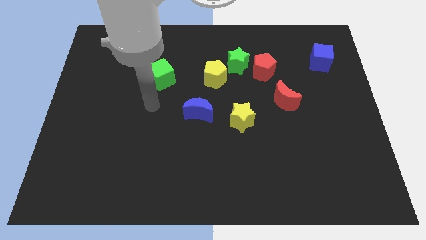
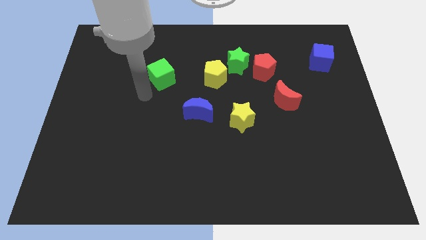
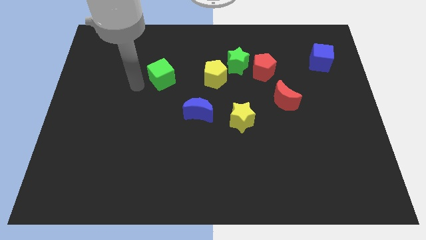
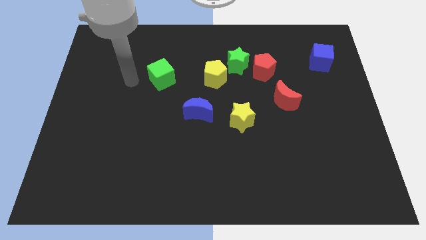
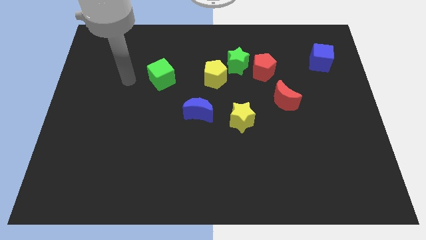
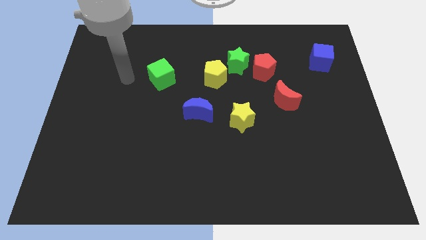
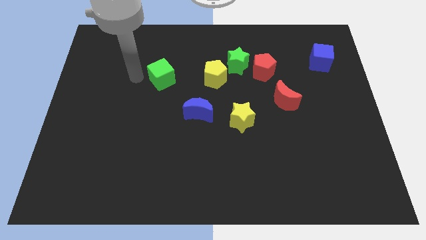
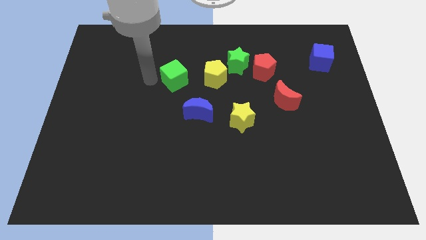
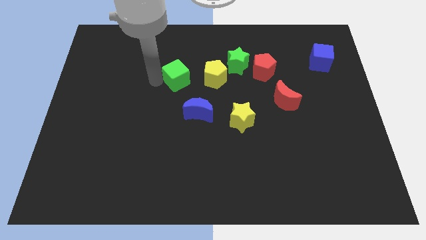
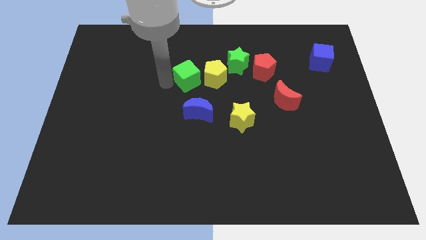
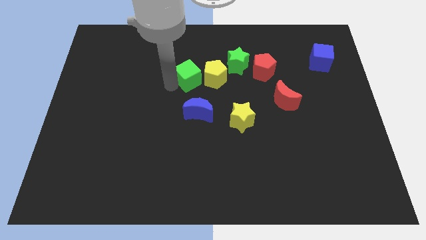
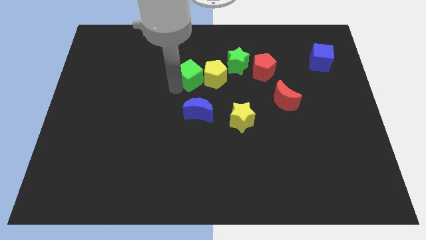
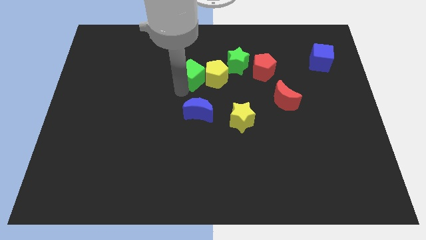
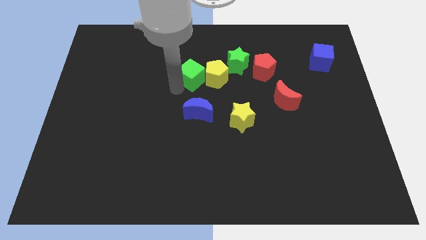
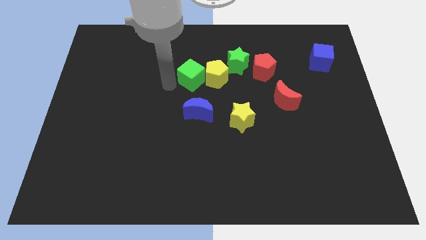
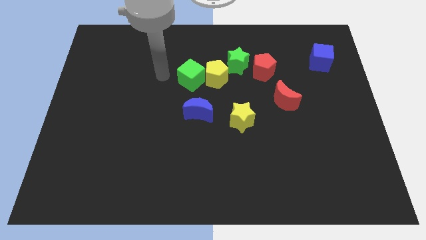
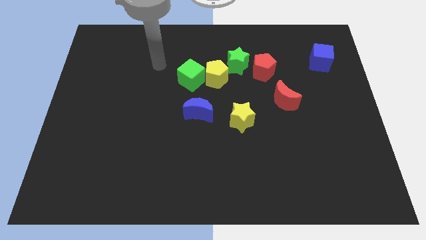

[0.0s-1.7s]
push the green cube into yellow pentagon

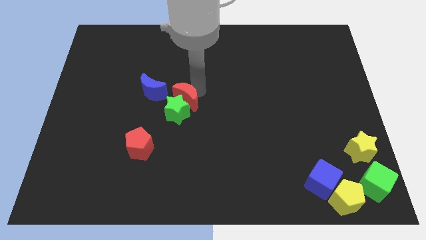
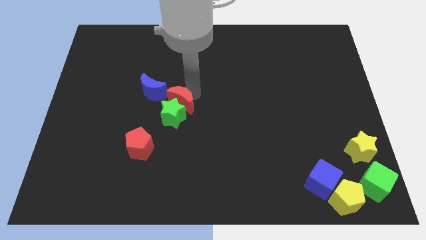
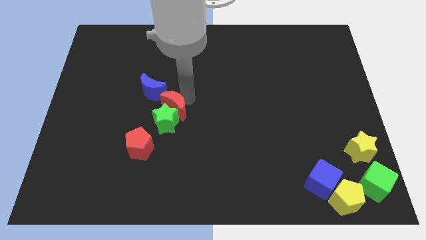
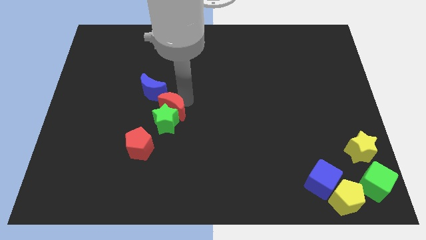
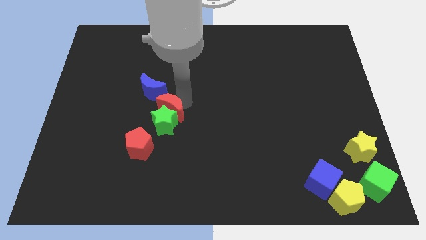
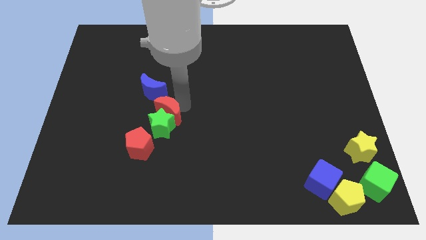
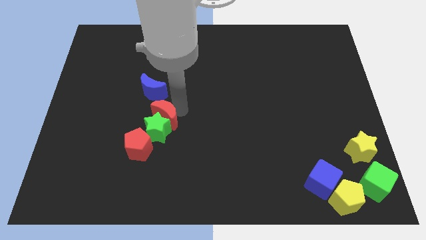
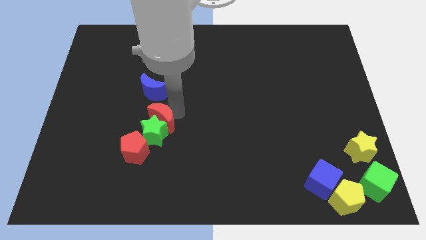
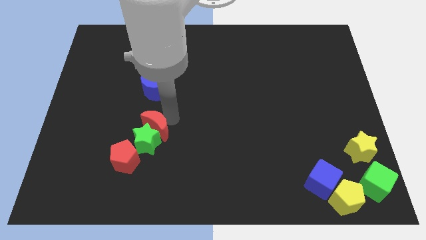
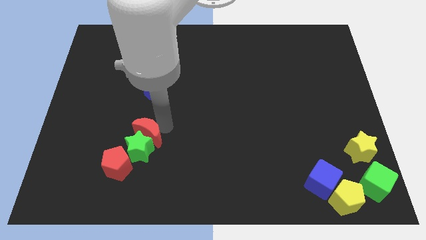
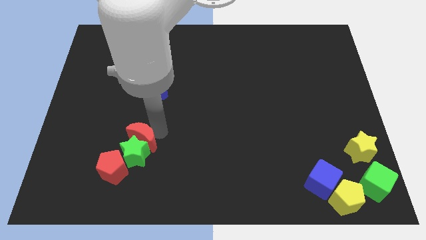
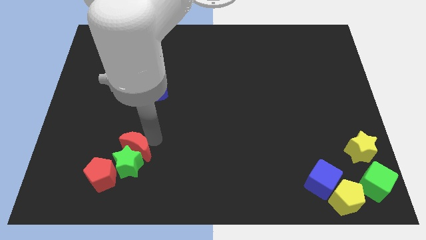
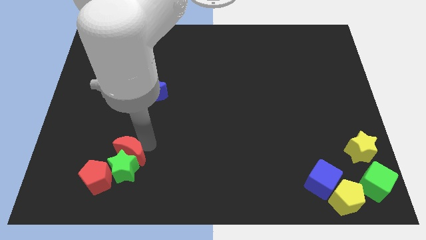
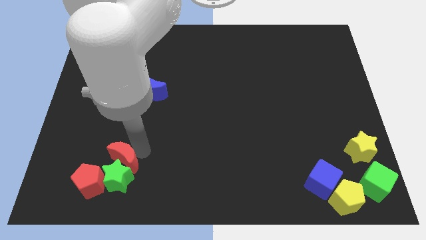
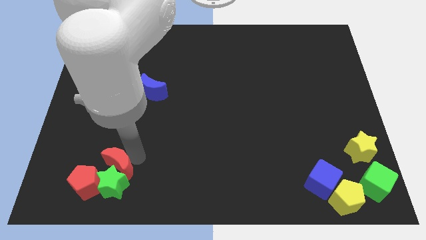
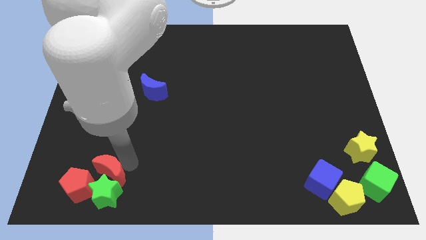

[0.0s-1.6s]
push red moon and the green star into the red pentagon

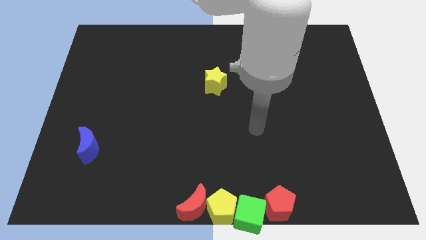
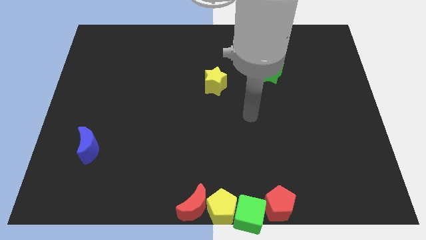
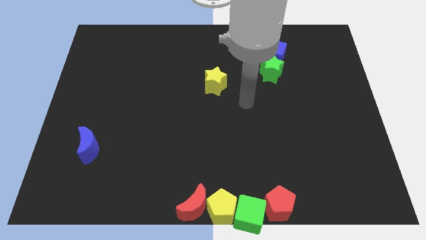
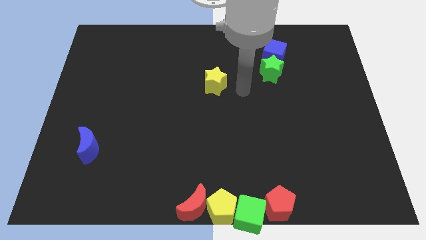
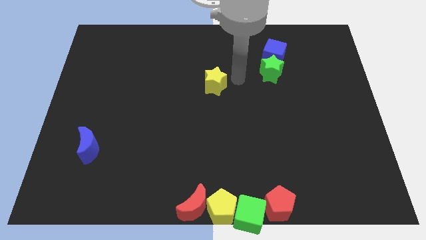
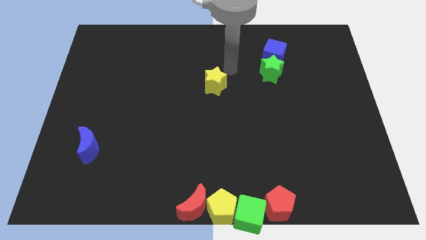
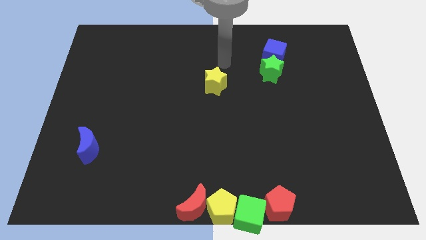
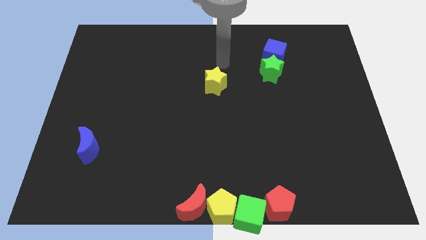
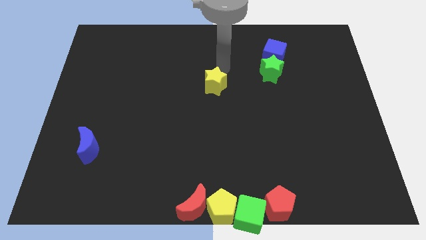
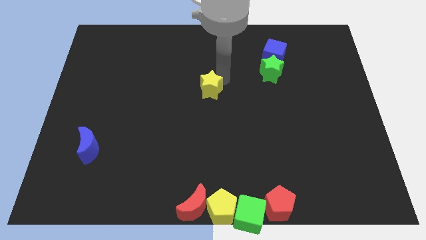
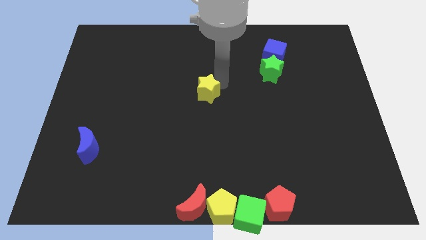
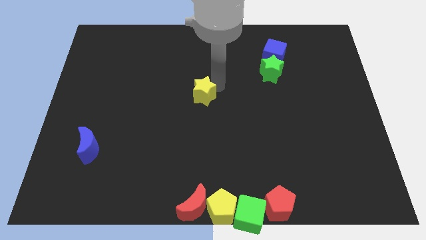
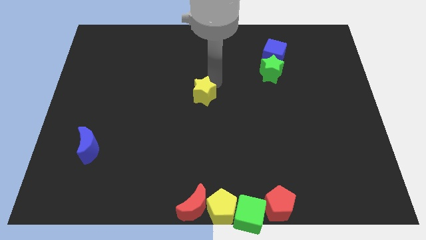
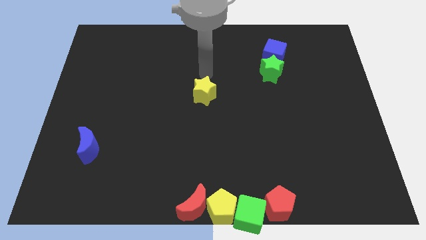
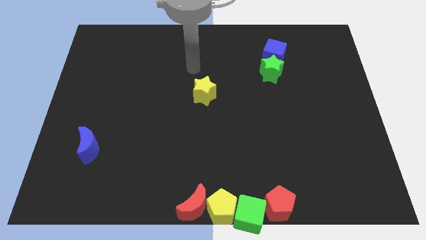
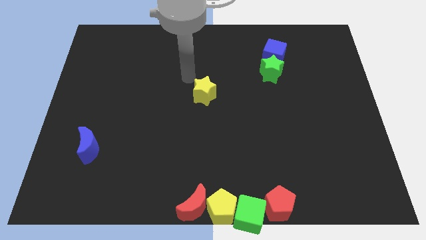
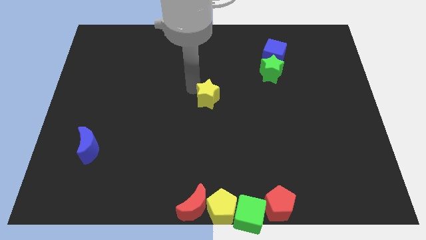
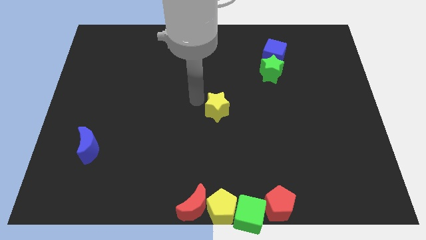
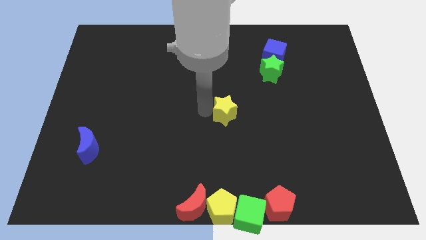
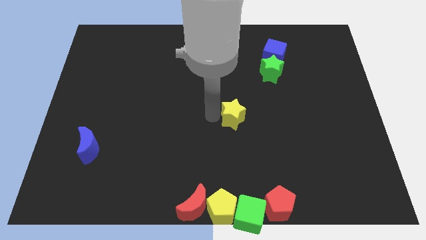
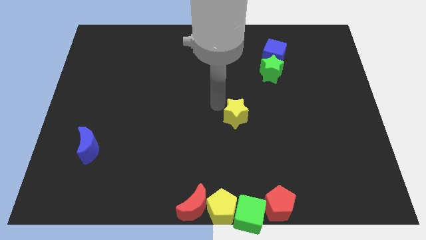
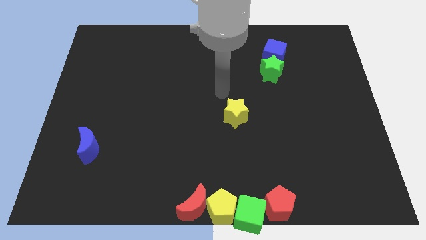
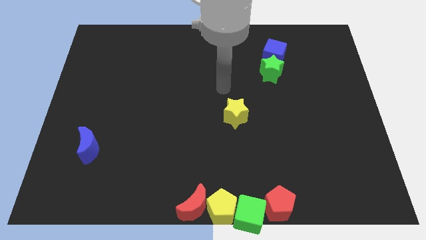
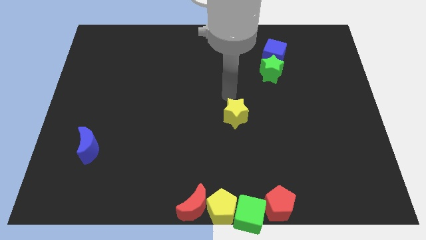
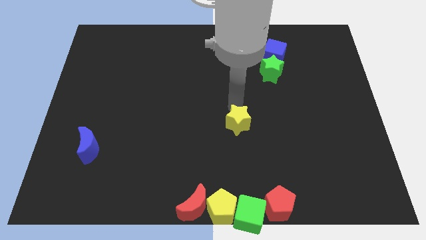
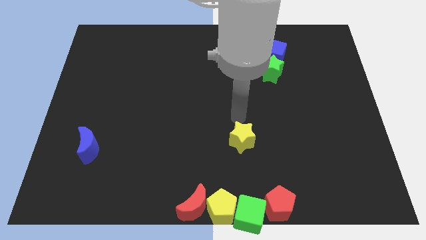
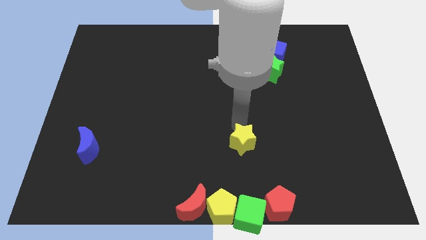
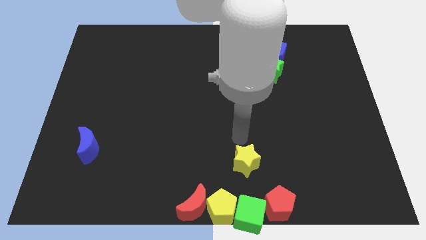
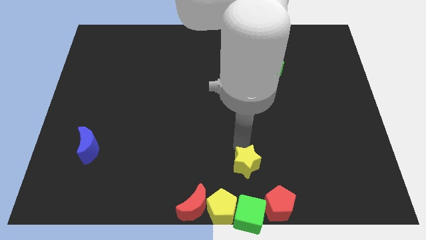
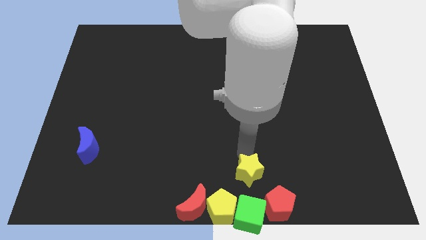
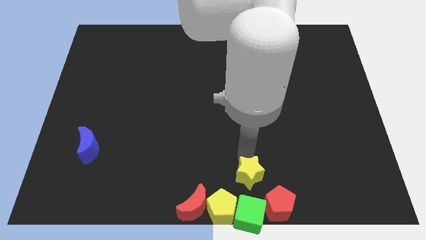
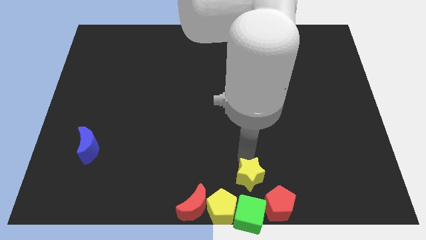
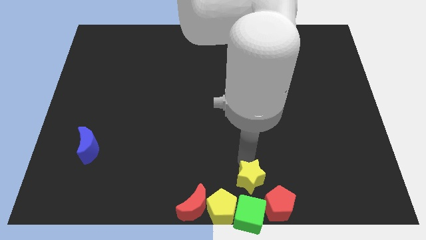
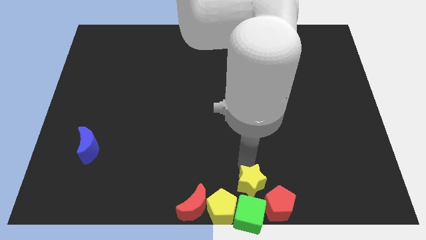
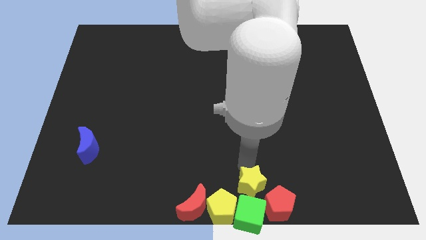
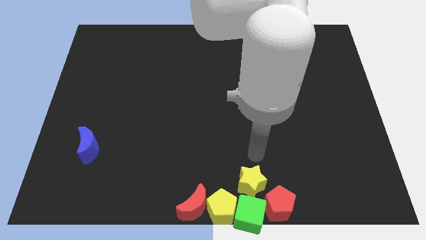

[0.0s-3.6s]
move yellow star above green cube

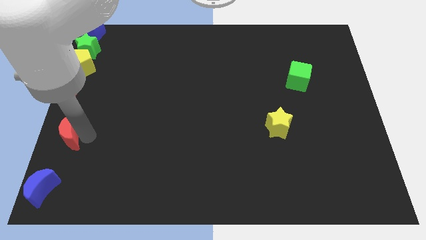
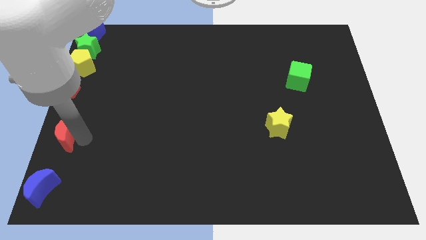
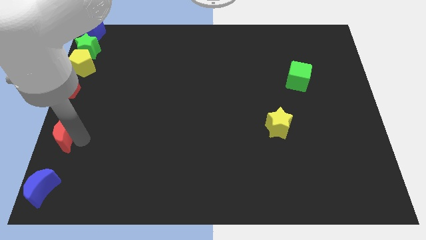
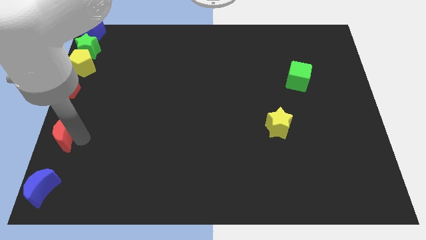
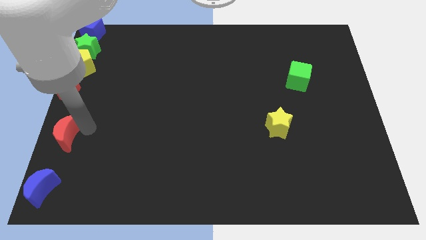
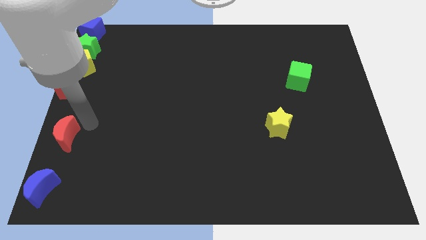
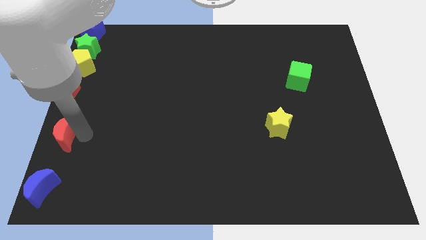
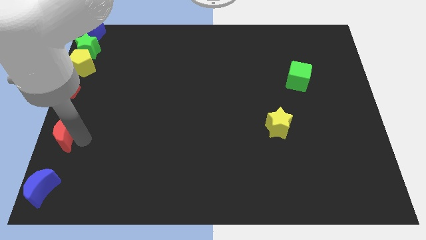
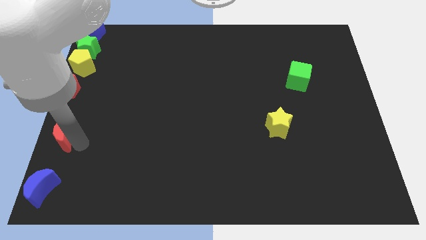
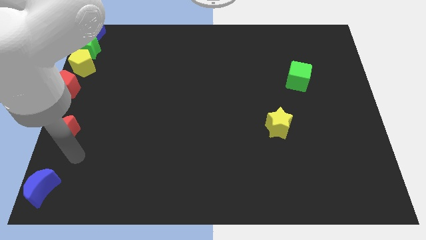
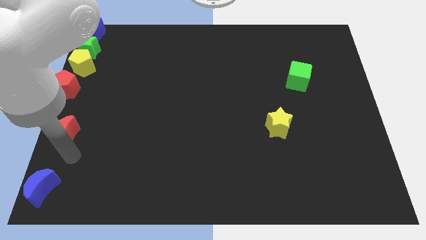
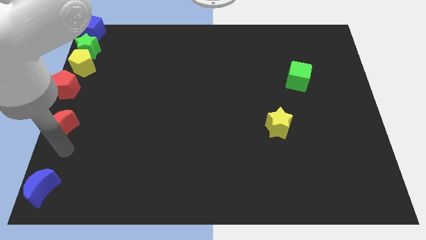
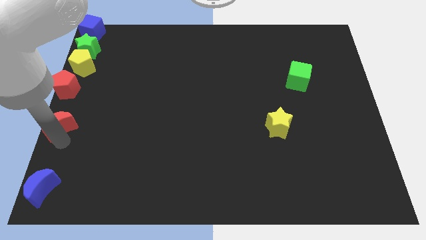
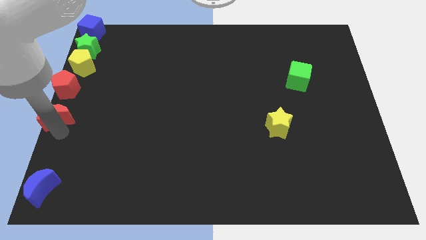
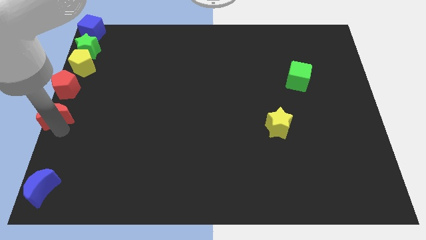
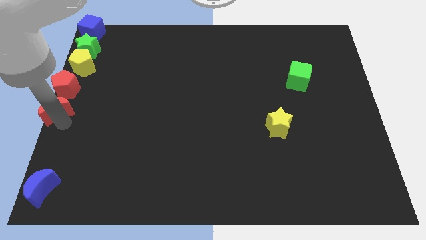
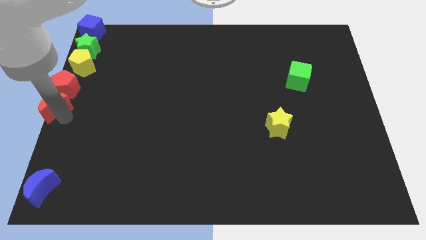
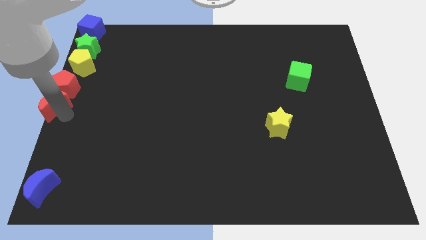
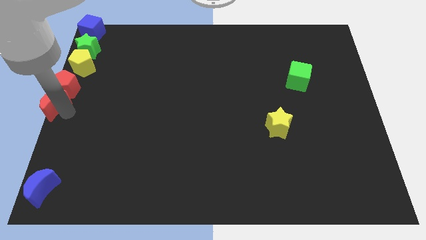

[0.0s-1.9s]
position the red crescent below the red pentagon

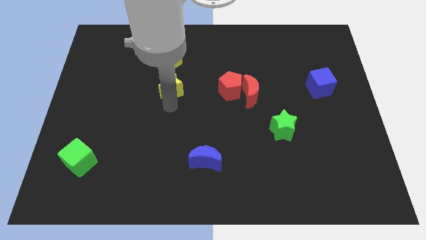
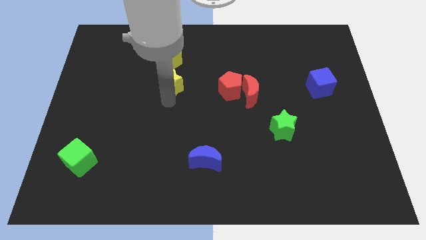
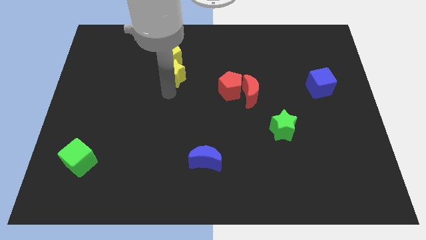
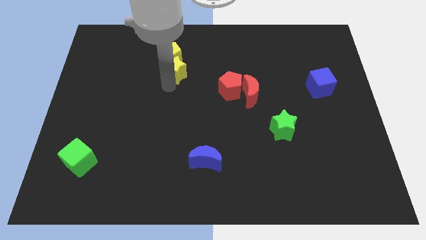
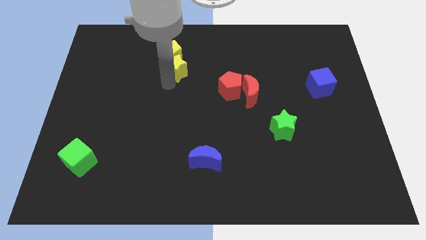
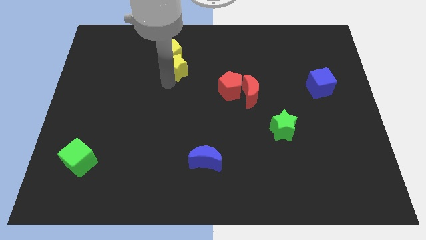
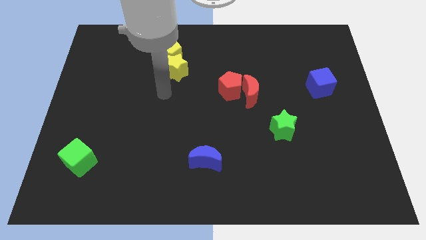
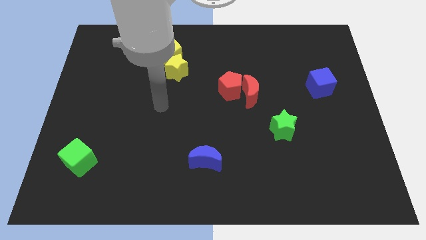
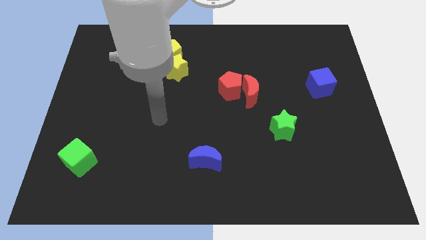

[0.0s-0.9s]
push the yellow star into the yellow pentagon
